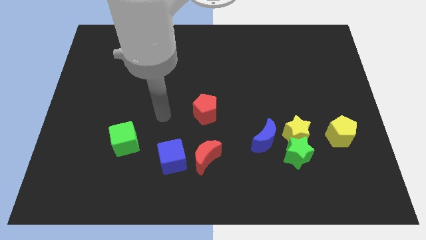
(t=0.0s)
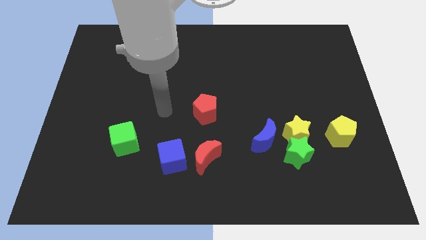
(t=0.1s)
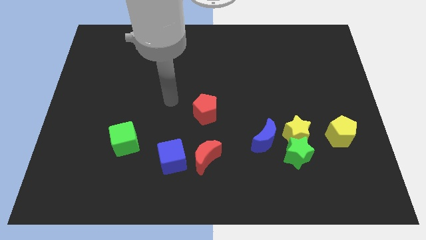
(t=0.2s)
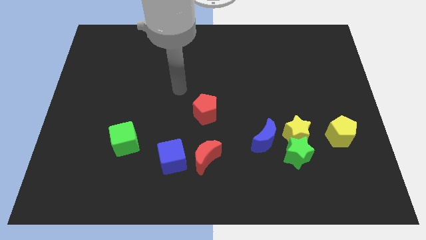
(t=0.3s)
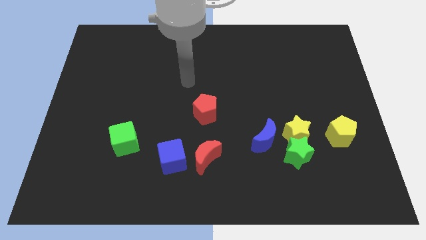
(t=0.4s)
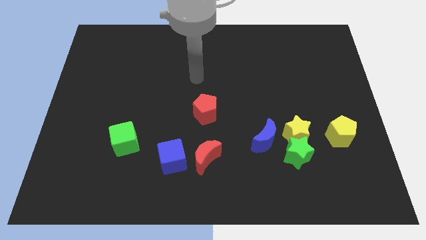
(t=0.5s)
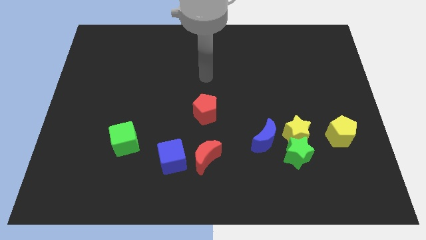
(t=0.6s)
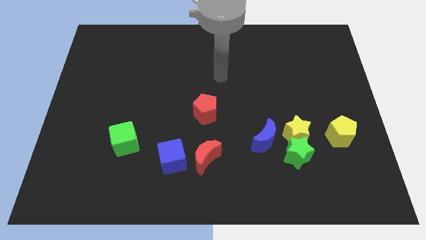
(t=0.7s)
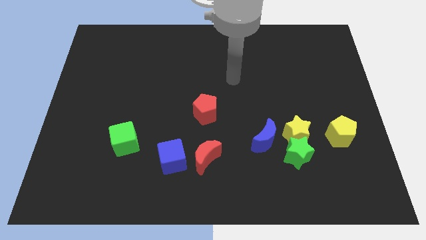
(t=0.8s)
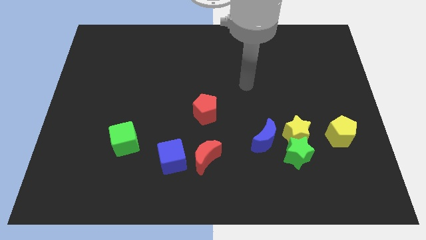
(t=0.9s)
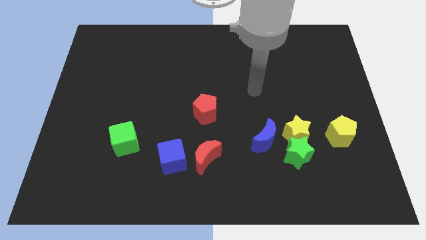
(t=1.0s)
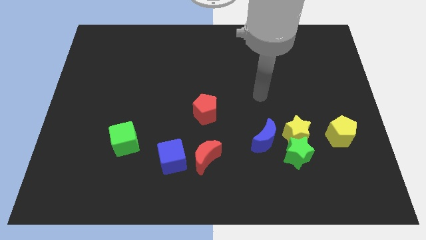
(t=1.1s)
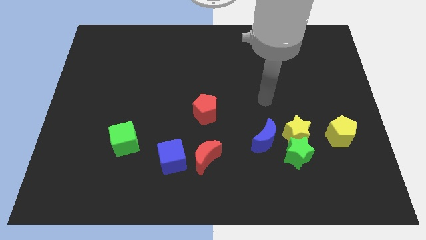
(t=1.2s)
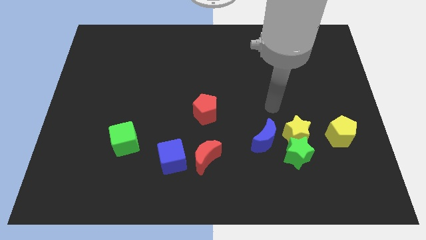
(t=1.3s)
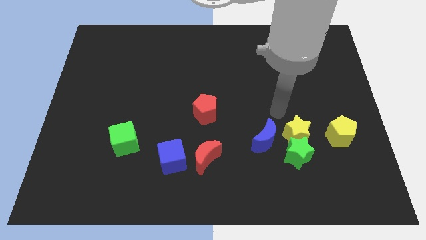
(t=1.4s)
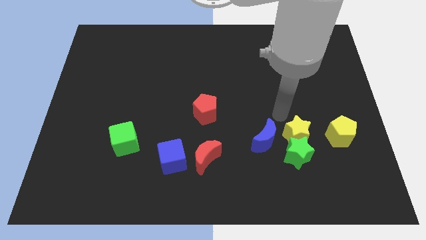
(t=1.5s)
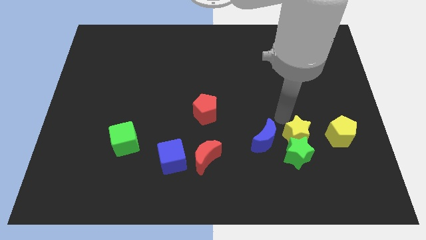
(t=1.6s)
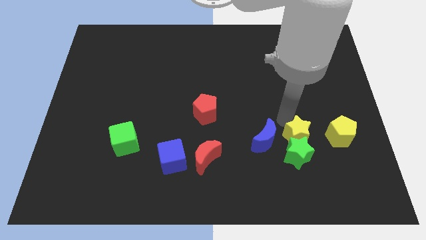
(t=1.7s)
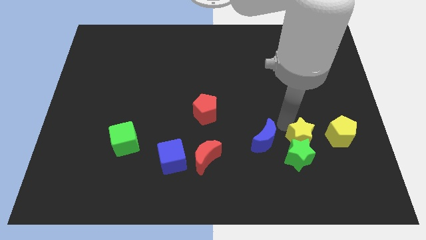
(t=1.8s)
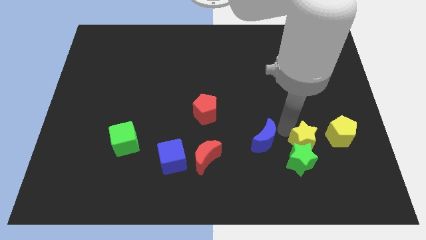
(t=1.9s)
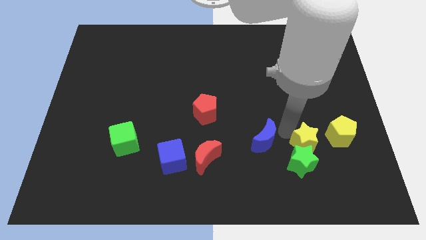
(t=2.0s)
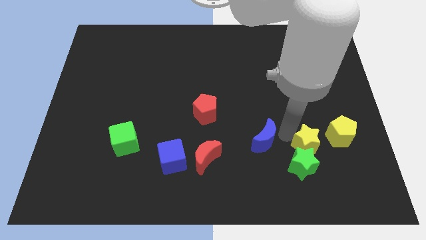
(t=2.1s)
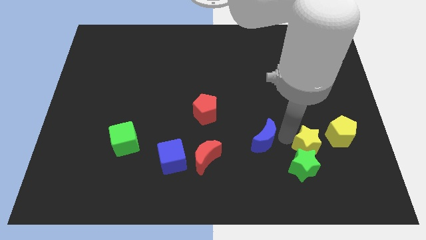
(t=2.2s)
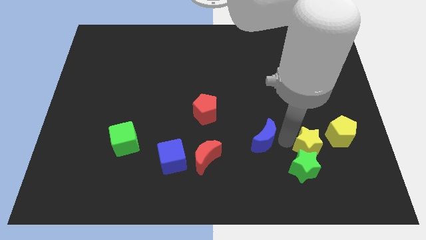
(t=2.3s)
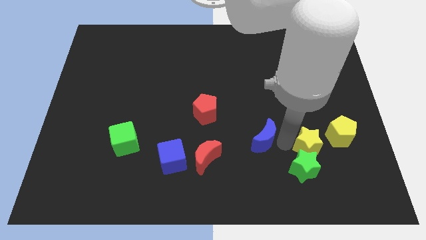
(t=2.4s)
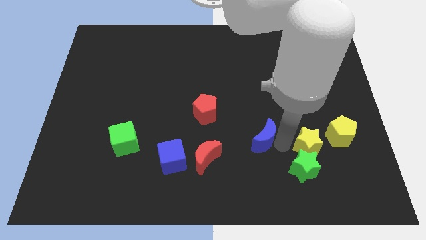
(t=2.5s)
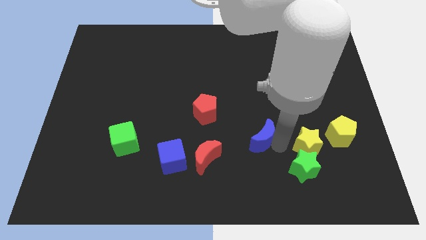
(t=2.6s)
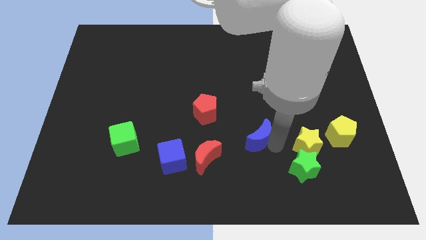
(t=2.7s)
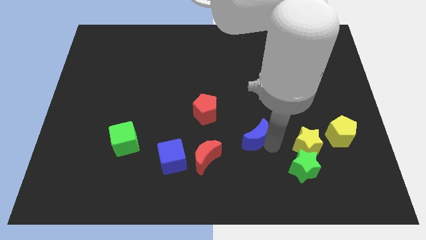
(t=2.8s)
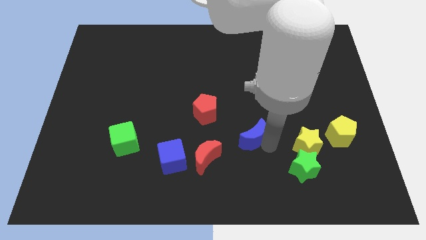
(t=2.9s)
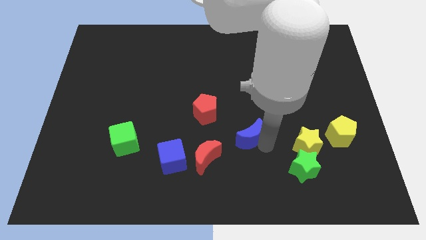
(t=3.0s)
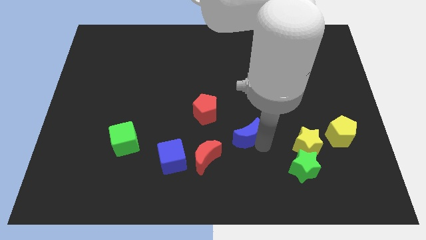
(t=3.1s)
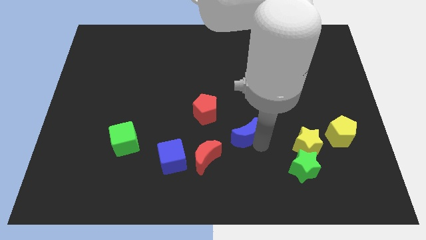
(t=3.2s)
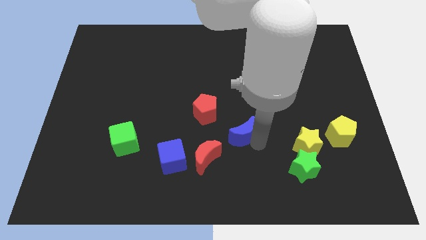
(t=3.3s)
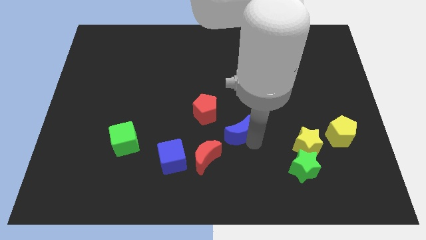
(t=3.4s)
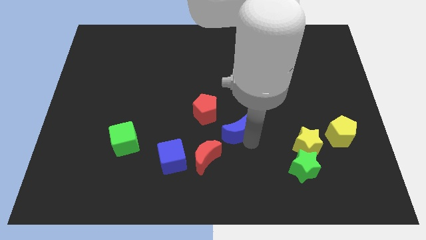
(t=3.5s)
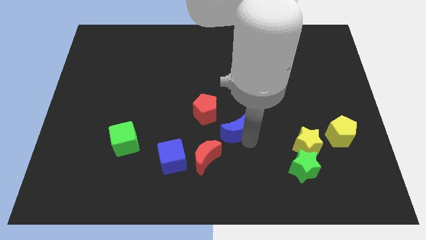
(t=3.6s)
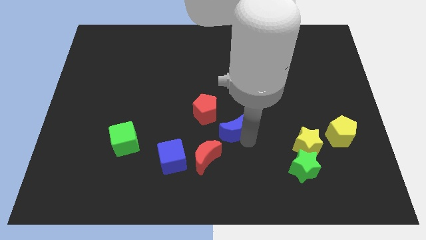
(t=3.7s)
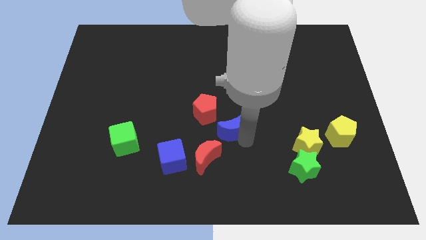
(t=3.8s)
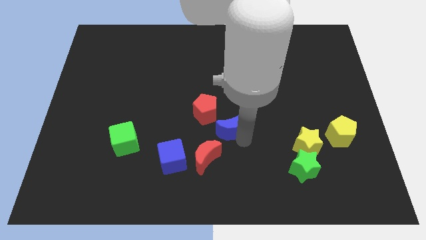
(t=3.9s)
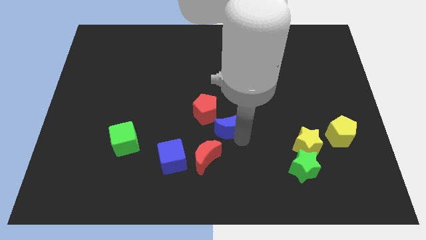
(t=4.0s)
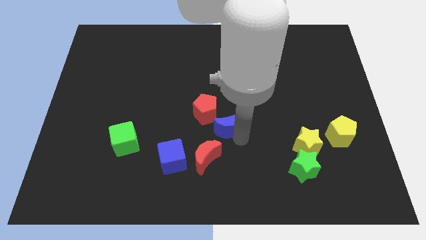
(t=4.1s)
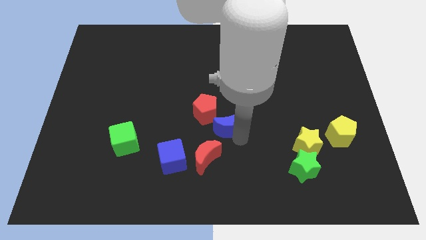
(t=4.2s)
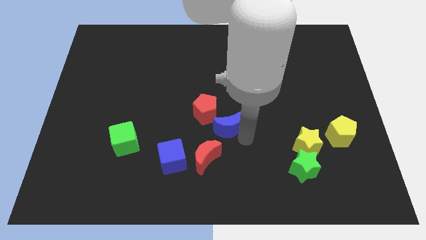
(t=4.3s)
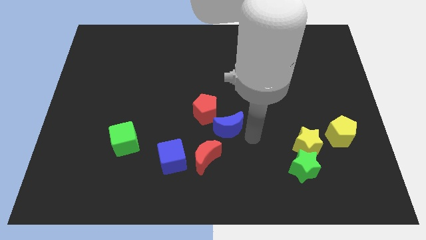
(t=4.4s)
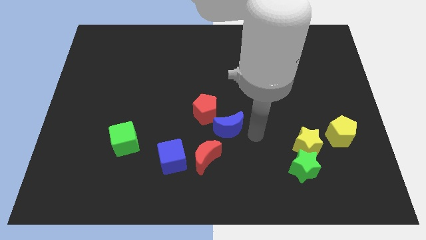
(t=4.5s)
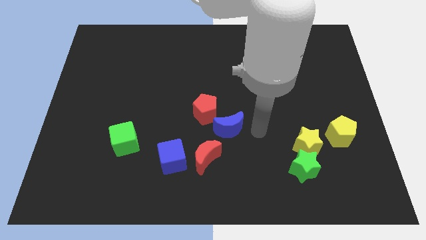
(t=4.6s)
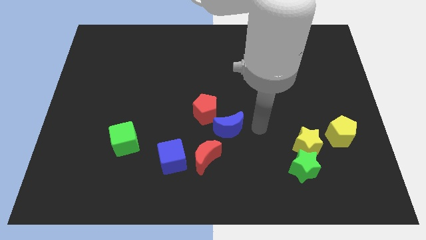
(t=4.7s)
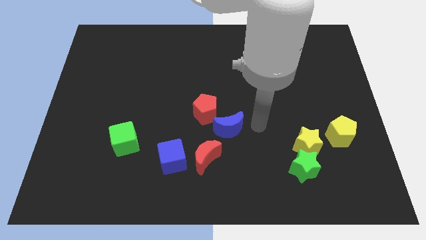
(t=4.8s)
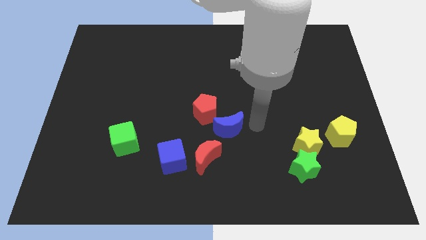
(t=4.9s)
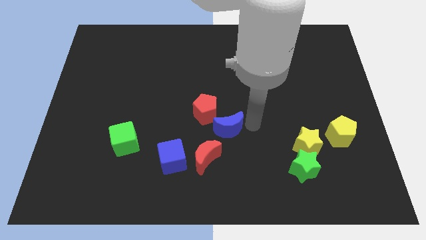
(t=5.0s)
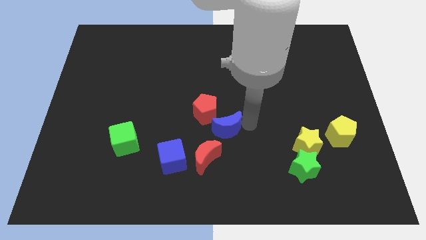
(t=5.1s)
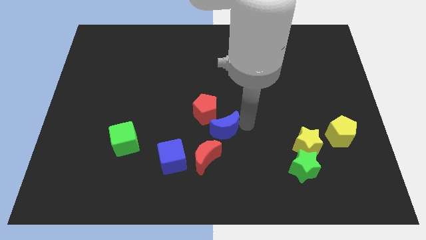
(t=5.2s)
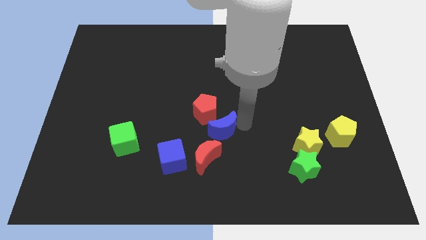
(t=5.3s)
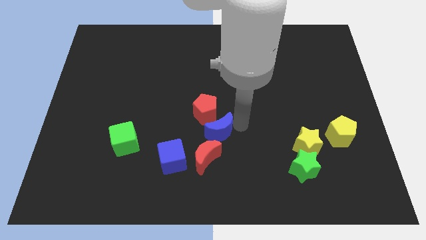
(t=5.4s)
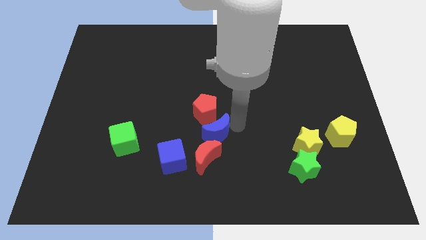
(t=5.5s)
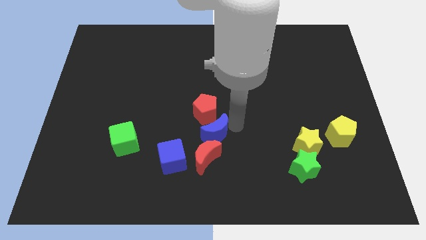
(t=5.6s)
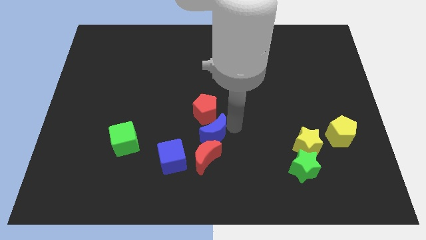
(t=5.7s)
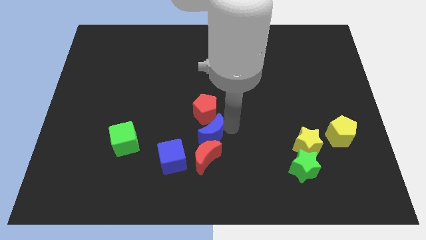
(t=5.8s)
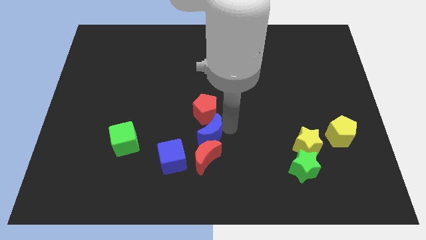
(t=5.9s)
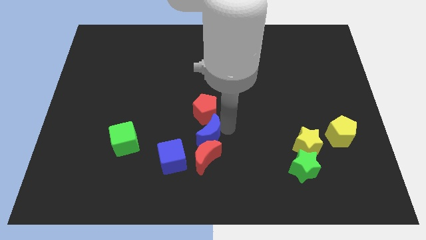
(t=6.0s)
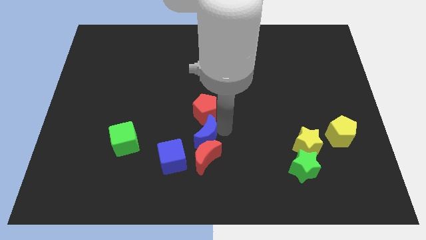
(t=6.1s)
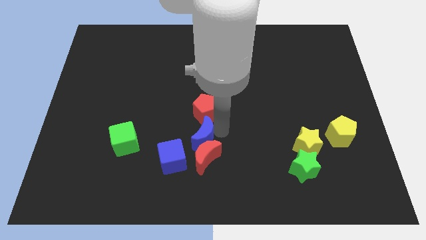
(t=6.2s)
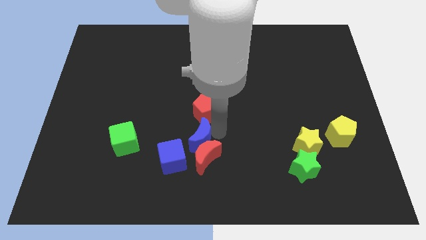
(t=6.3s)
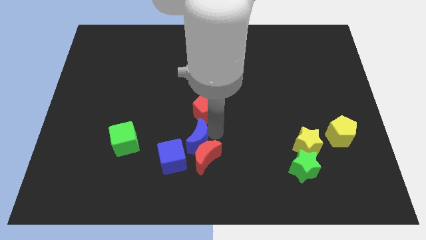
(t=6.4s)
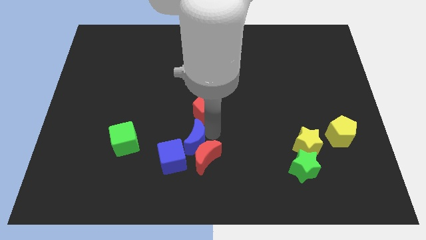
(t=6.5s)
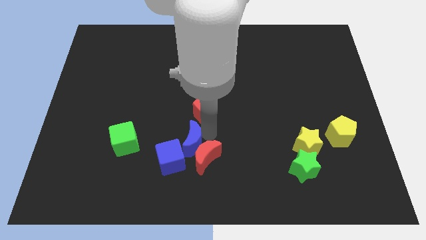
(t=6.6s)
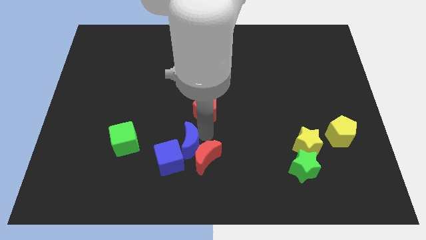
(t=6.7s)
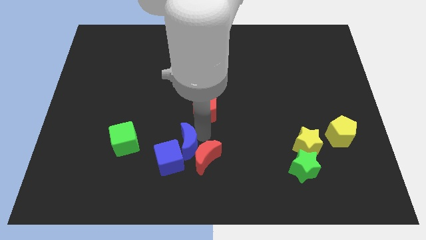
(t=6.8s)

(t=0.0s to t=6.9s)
move the blue moon towards the blue cube

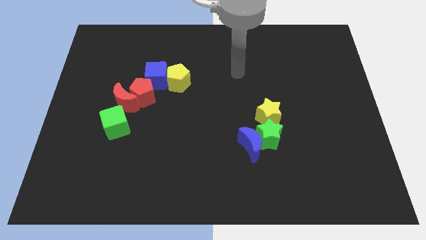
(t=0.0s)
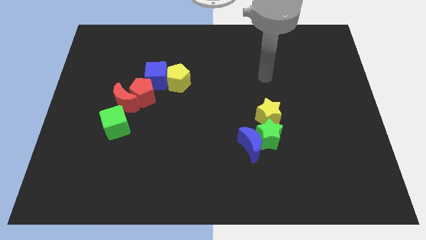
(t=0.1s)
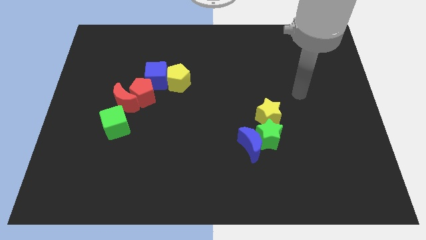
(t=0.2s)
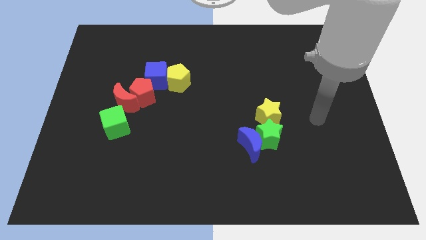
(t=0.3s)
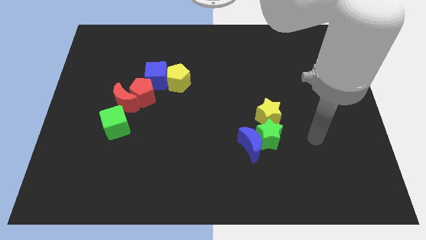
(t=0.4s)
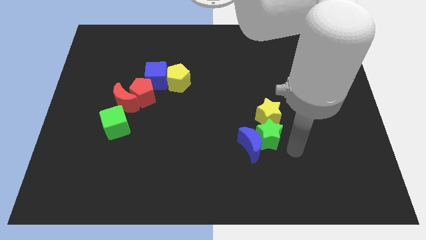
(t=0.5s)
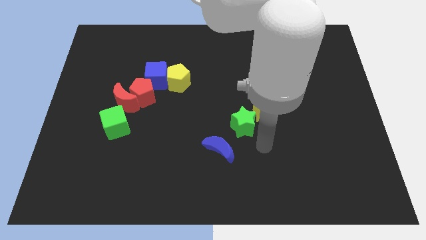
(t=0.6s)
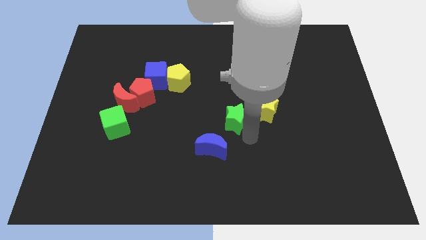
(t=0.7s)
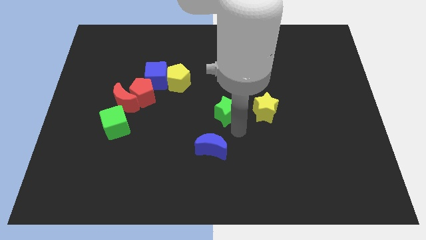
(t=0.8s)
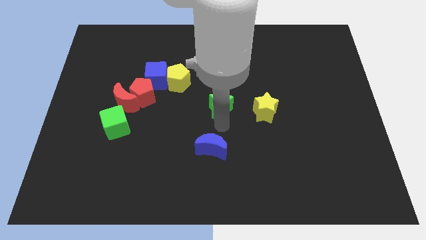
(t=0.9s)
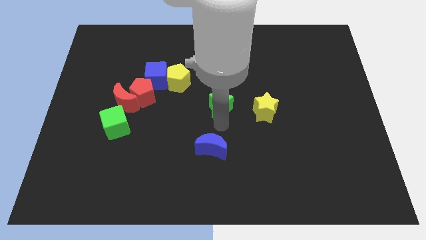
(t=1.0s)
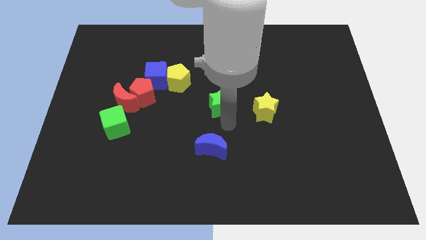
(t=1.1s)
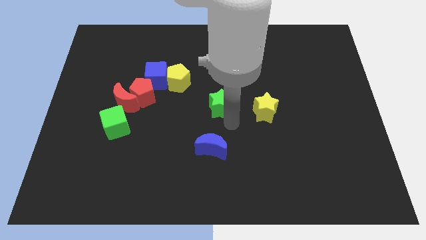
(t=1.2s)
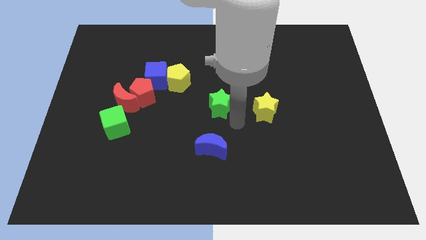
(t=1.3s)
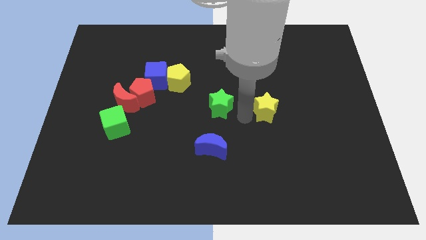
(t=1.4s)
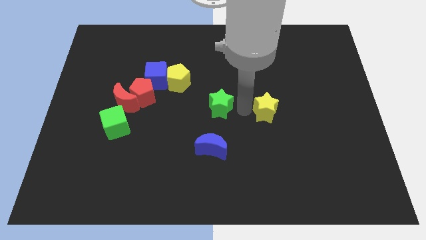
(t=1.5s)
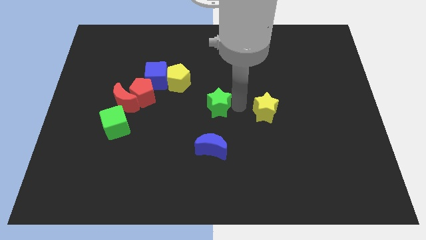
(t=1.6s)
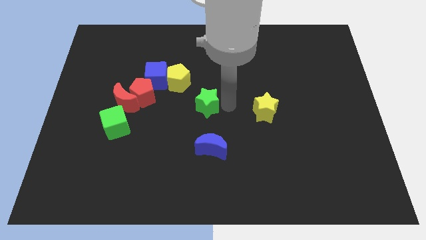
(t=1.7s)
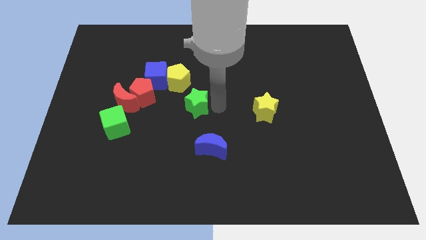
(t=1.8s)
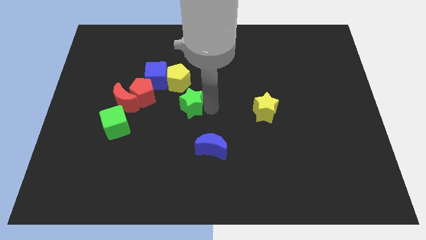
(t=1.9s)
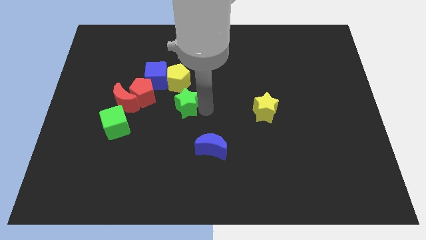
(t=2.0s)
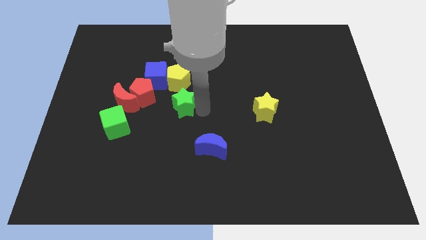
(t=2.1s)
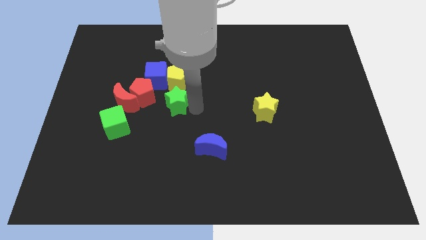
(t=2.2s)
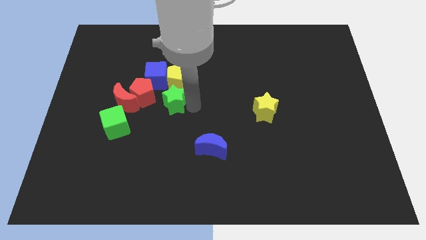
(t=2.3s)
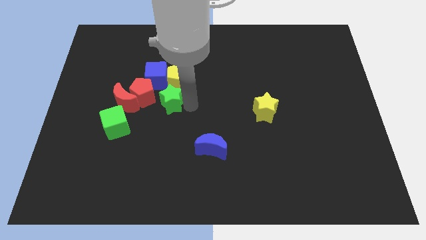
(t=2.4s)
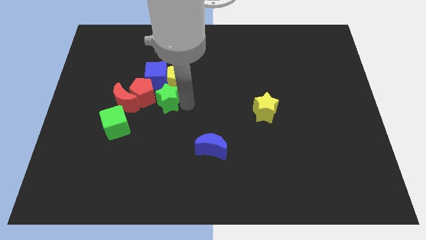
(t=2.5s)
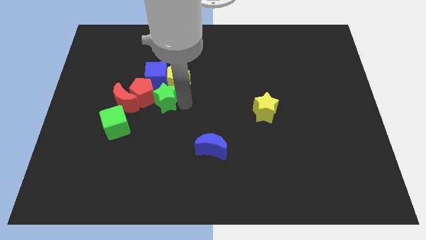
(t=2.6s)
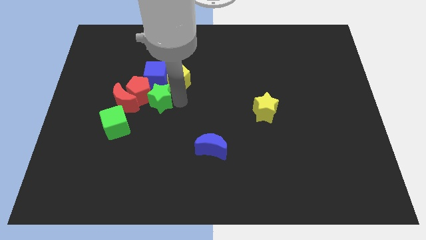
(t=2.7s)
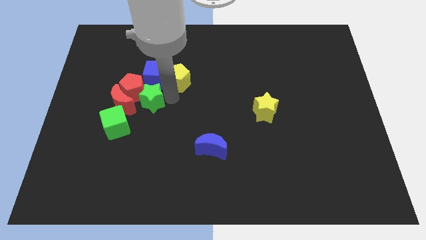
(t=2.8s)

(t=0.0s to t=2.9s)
push the green star close to the red pentagon
